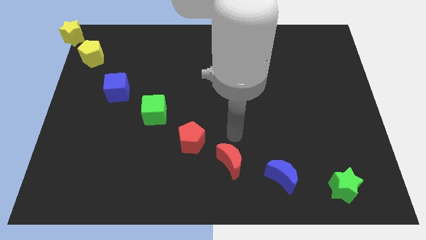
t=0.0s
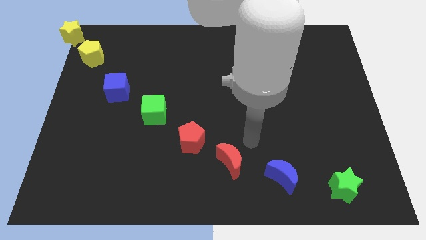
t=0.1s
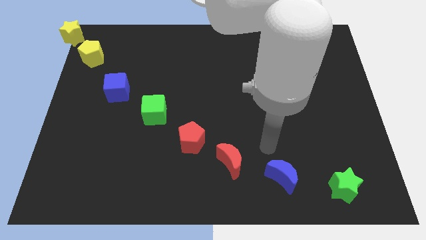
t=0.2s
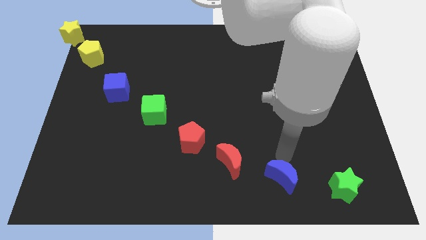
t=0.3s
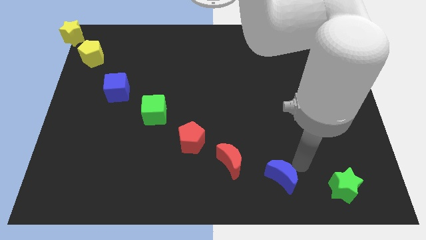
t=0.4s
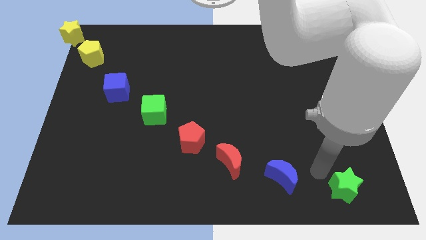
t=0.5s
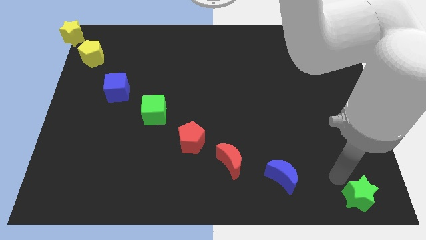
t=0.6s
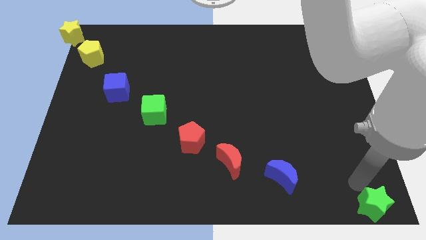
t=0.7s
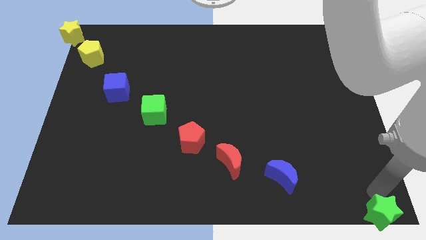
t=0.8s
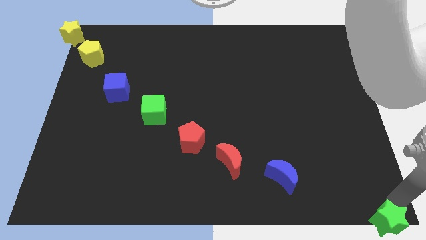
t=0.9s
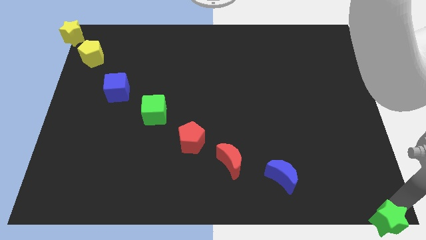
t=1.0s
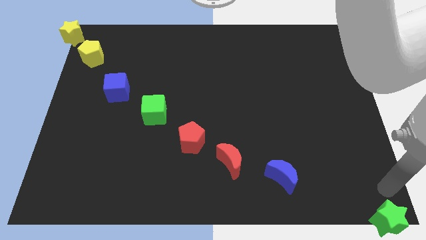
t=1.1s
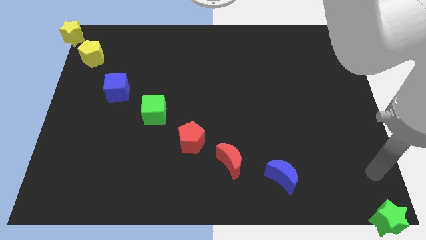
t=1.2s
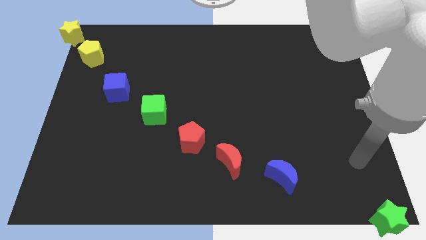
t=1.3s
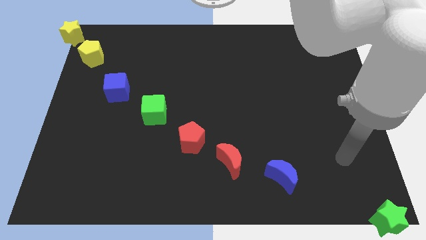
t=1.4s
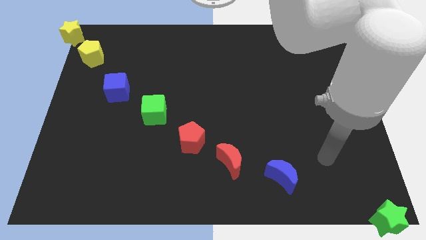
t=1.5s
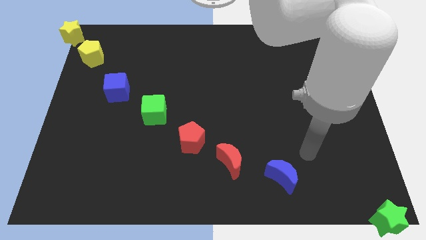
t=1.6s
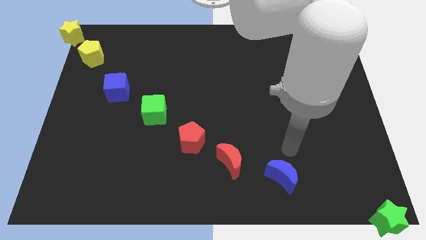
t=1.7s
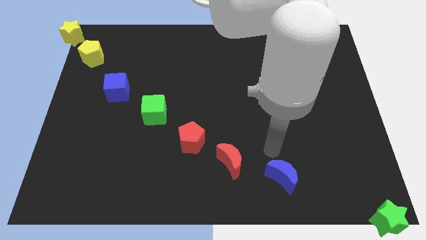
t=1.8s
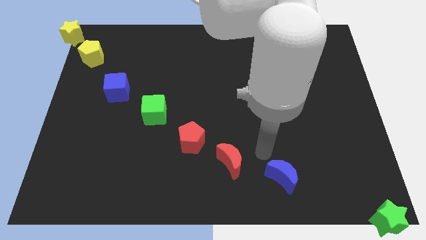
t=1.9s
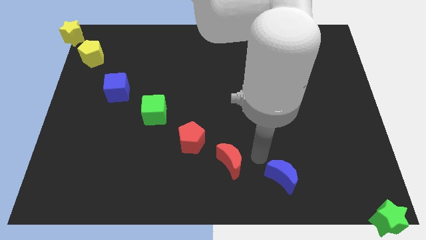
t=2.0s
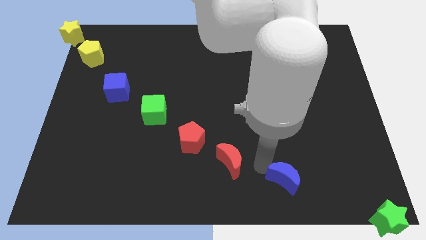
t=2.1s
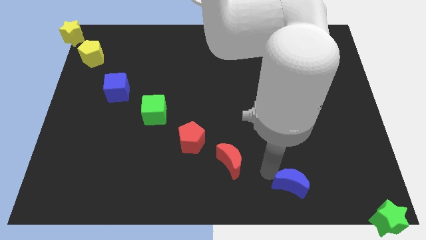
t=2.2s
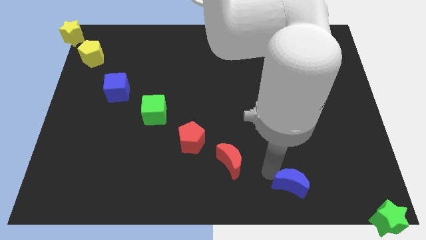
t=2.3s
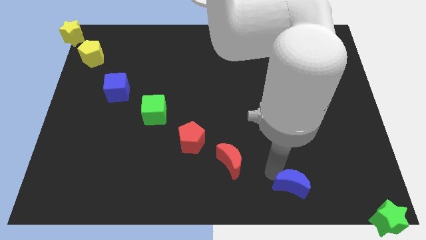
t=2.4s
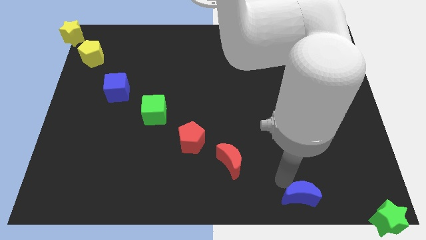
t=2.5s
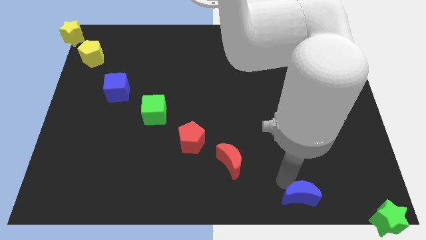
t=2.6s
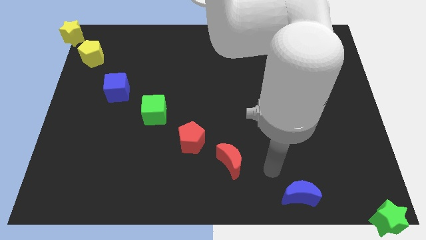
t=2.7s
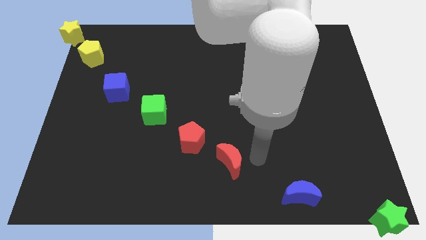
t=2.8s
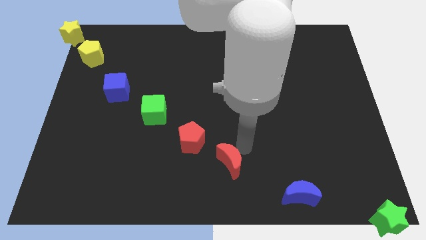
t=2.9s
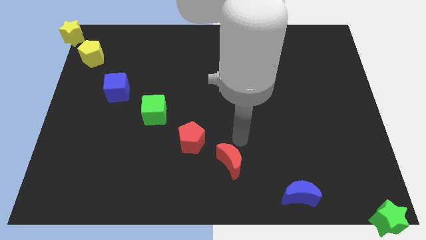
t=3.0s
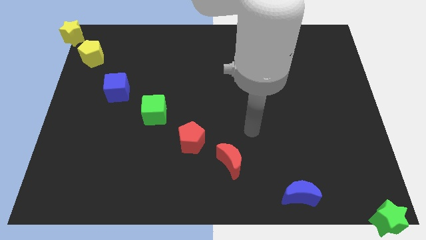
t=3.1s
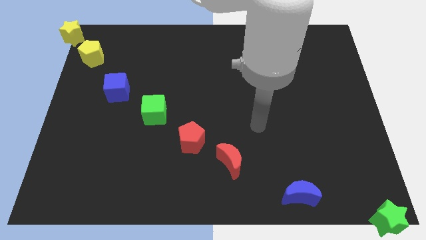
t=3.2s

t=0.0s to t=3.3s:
line the blocks up diagonally

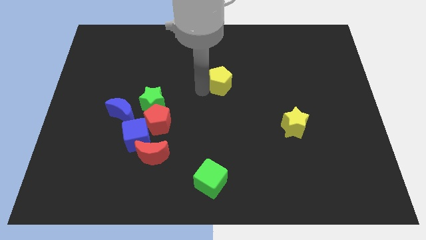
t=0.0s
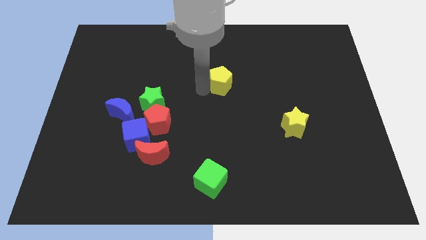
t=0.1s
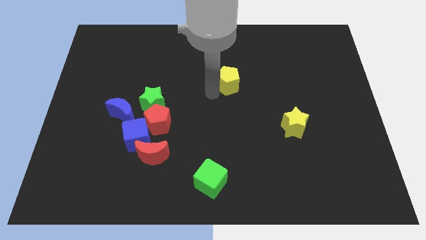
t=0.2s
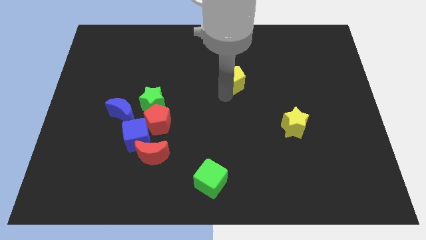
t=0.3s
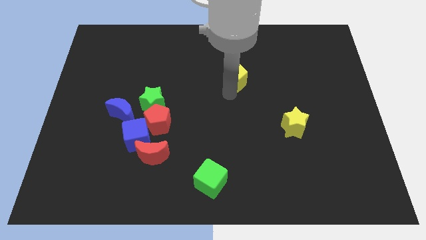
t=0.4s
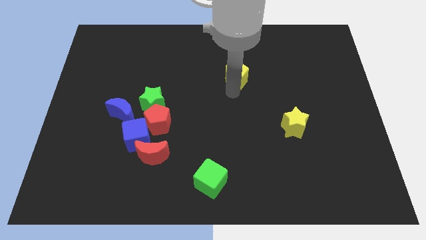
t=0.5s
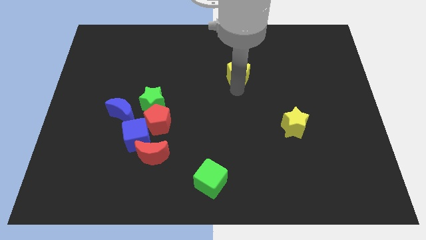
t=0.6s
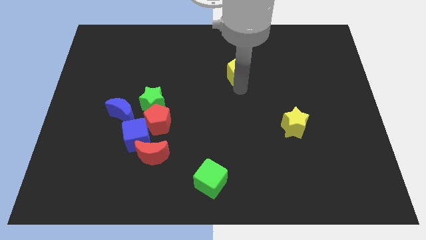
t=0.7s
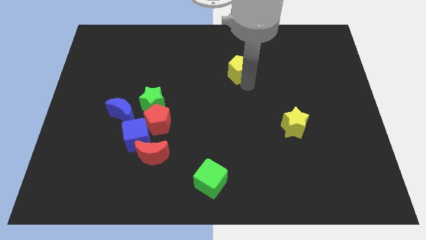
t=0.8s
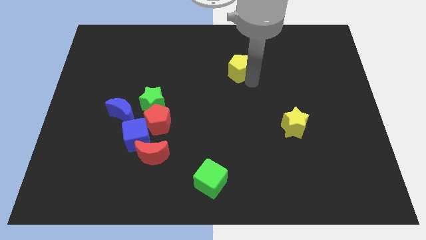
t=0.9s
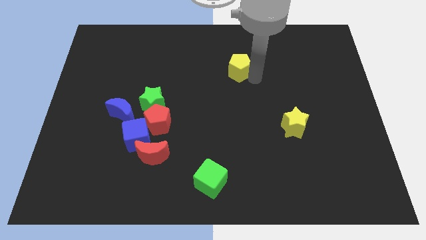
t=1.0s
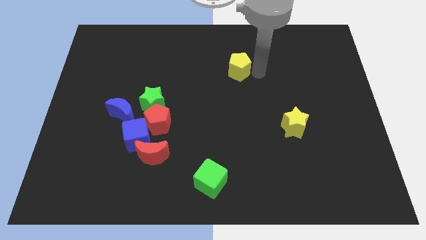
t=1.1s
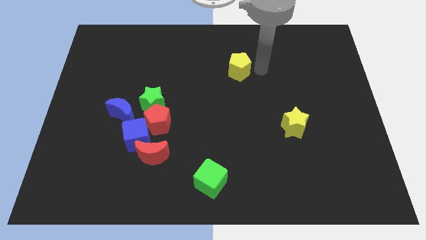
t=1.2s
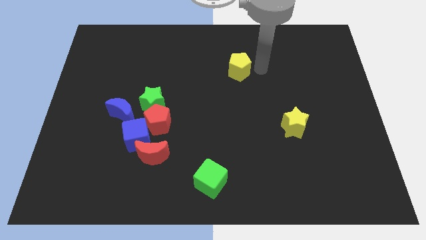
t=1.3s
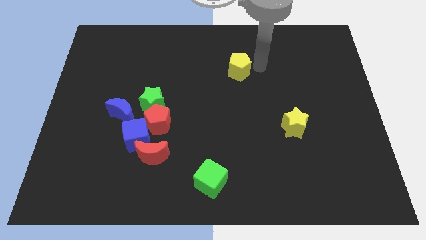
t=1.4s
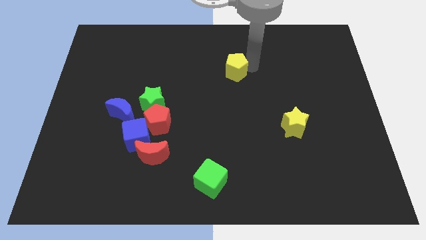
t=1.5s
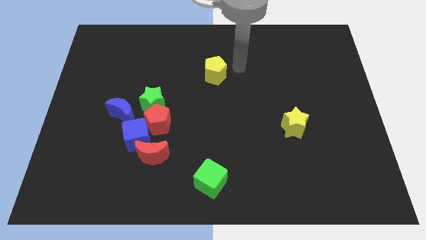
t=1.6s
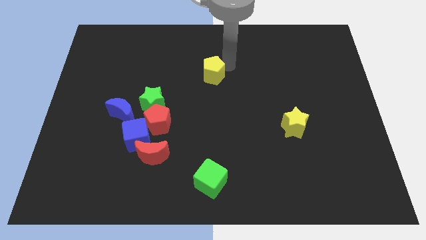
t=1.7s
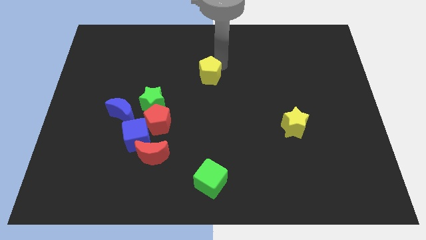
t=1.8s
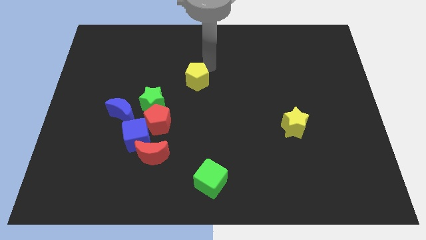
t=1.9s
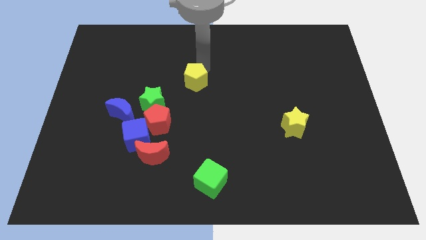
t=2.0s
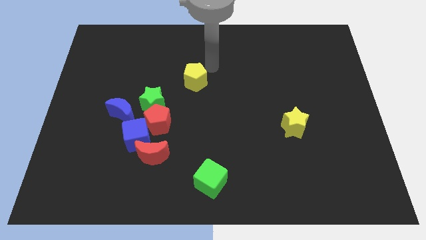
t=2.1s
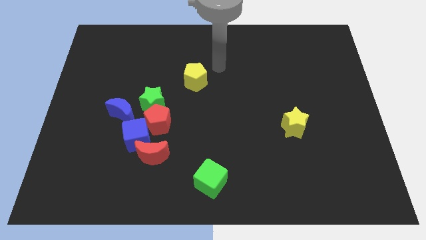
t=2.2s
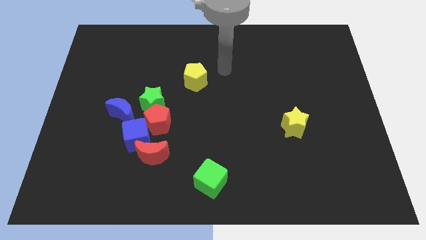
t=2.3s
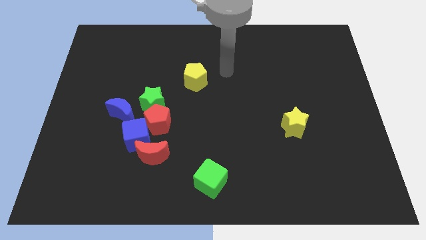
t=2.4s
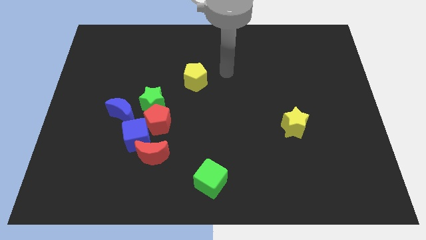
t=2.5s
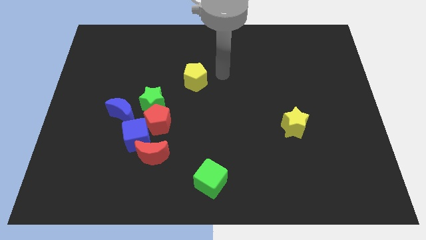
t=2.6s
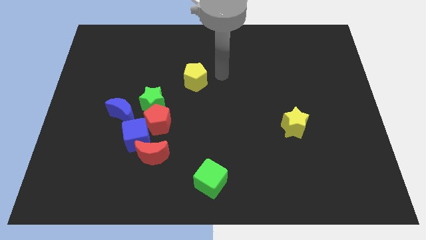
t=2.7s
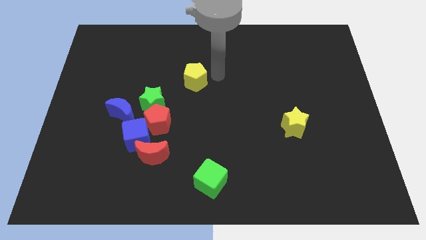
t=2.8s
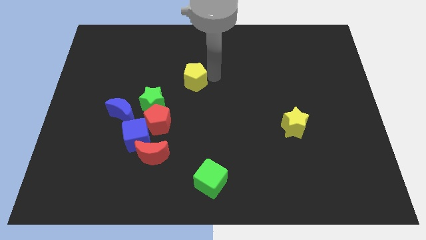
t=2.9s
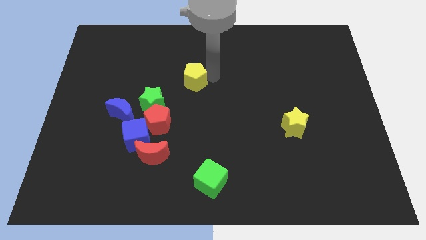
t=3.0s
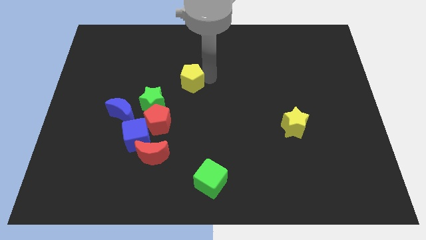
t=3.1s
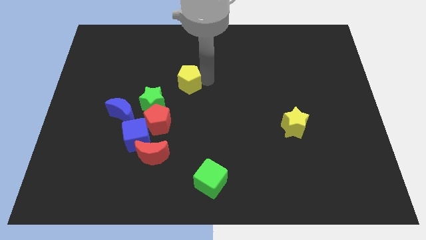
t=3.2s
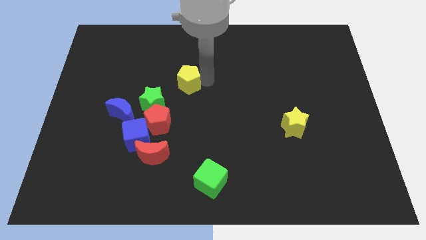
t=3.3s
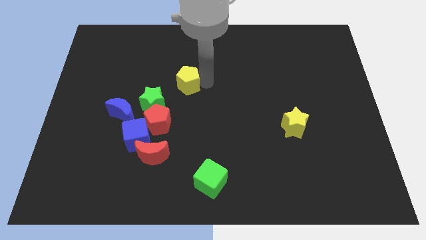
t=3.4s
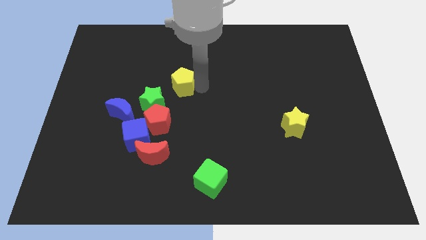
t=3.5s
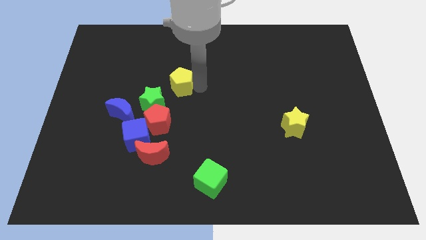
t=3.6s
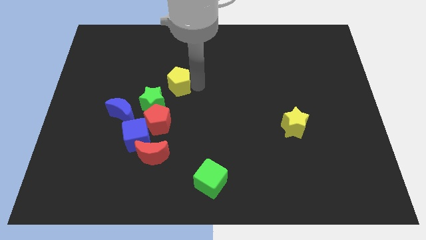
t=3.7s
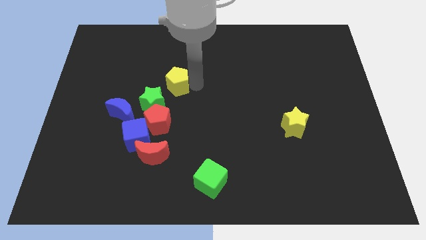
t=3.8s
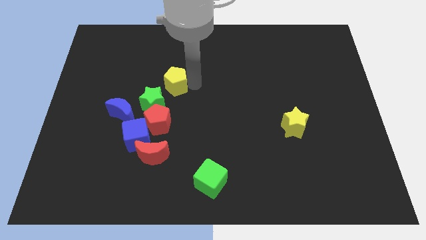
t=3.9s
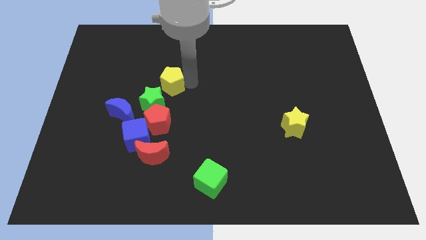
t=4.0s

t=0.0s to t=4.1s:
move the yellow pentagon to the top right of the green star

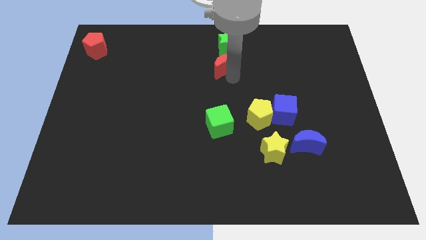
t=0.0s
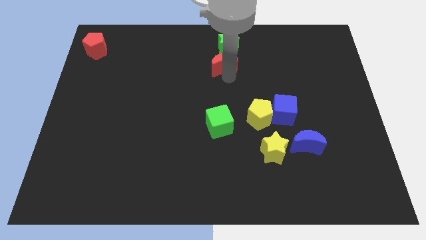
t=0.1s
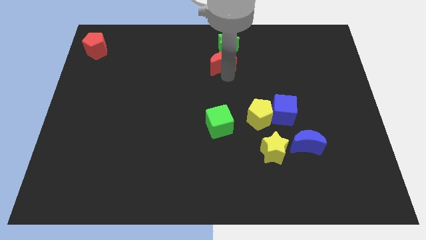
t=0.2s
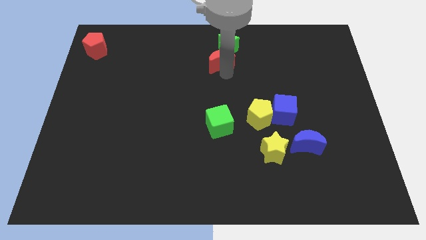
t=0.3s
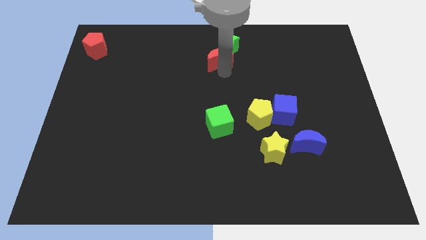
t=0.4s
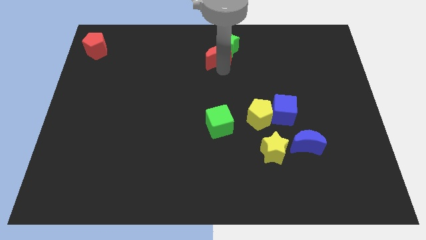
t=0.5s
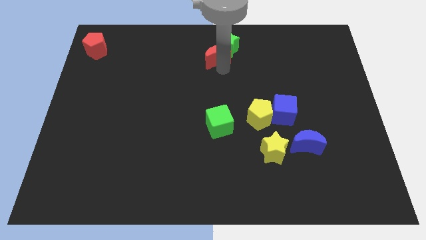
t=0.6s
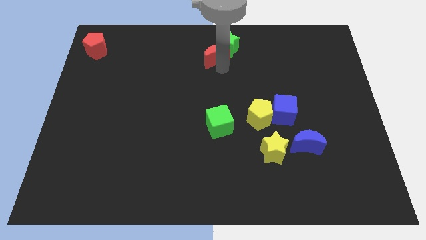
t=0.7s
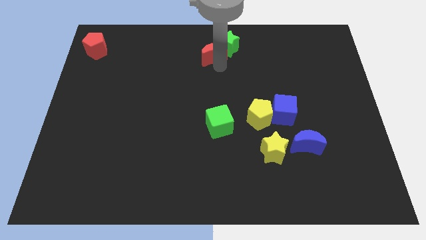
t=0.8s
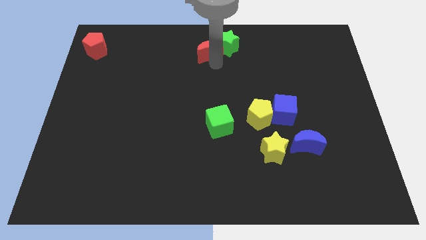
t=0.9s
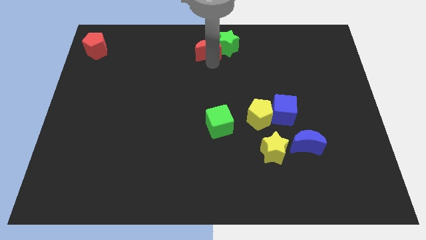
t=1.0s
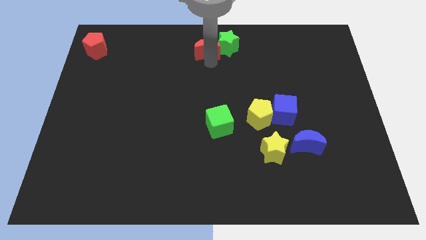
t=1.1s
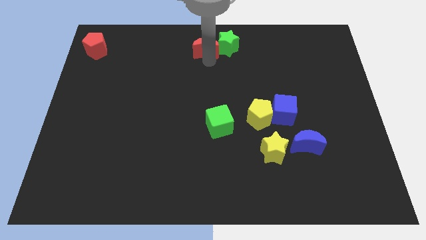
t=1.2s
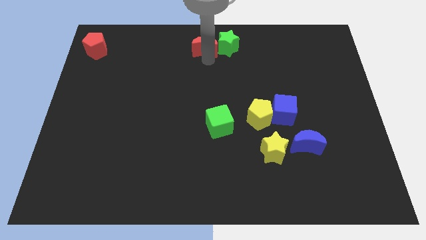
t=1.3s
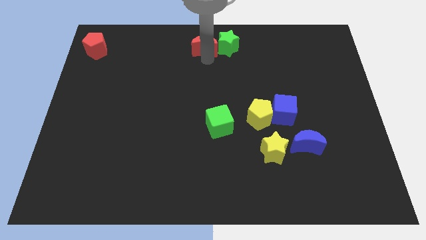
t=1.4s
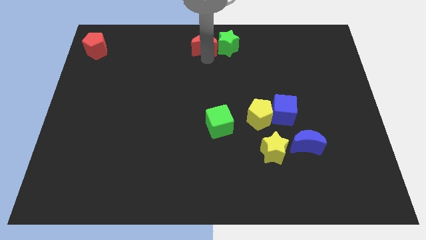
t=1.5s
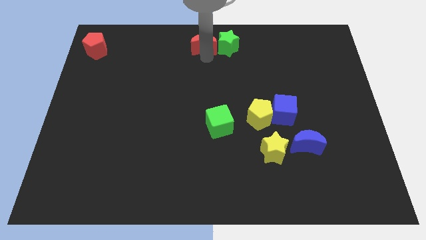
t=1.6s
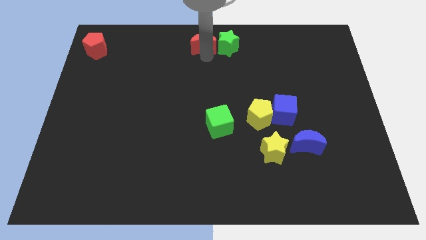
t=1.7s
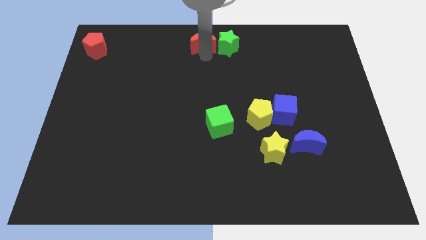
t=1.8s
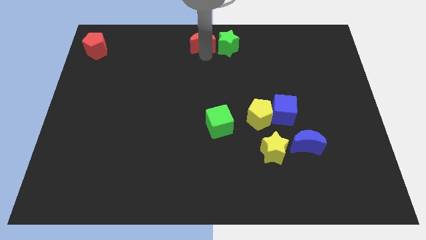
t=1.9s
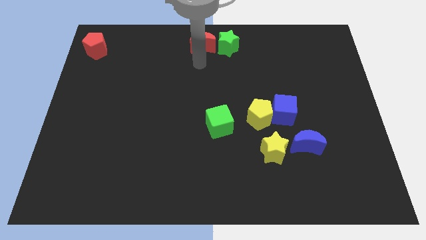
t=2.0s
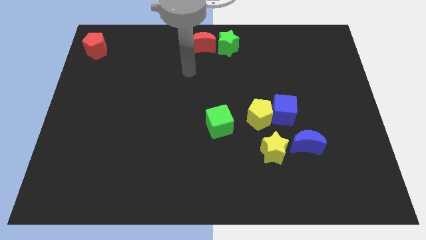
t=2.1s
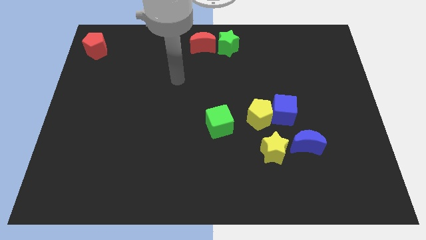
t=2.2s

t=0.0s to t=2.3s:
move the red crescent to the left of the green star
